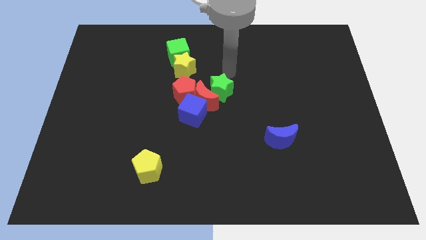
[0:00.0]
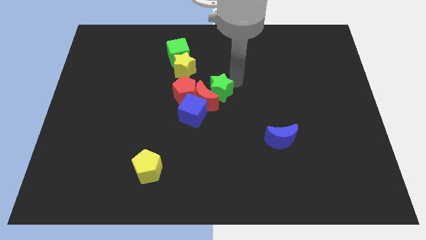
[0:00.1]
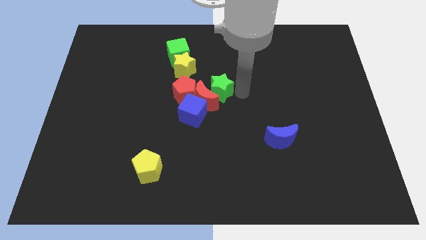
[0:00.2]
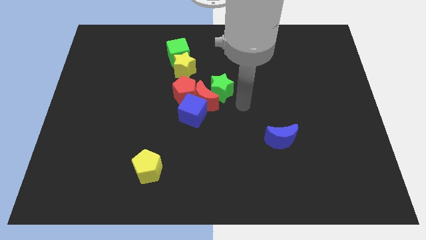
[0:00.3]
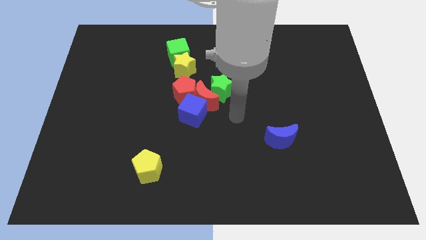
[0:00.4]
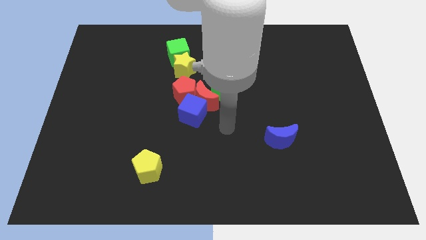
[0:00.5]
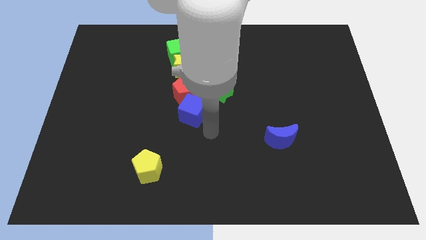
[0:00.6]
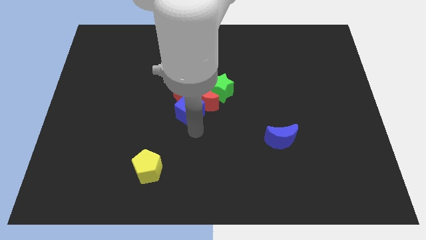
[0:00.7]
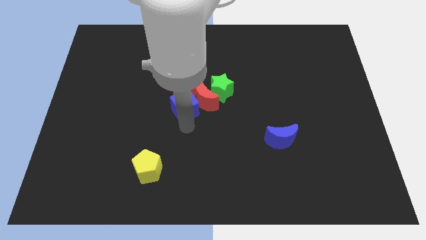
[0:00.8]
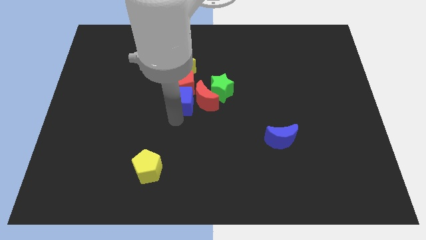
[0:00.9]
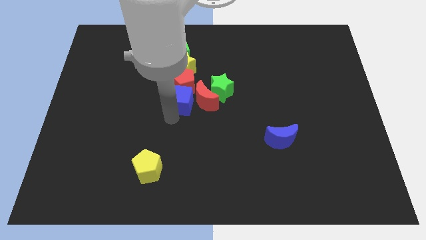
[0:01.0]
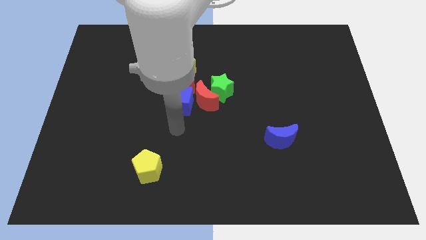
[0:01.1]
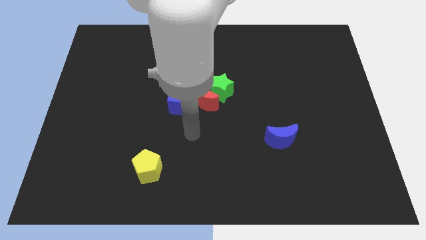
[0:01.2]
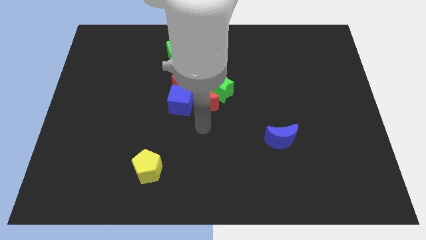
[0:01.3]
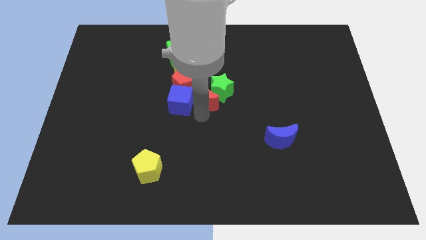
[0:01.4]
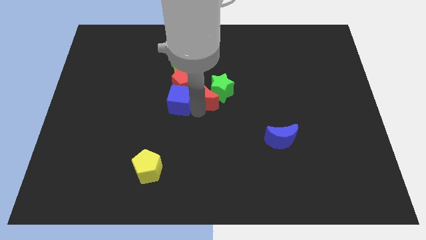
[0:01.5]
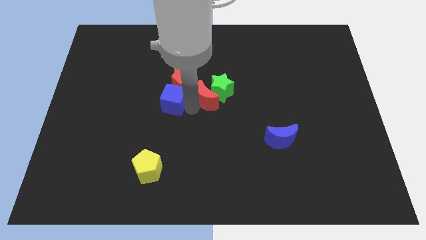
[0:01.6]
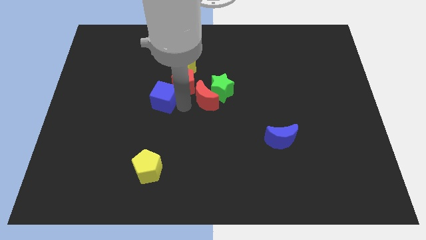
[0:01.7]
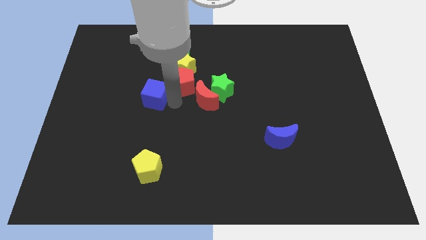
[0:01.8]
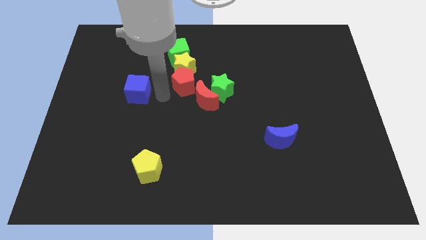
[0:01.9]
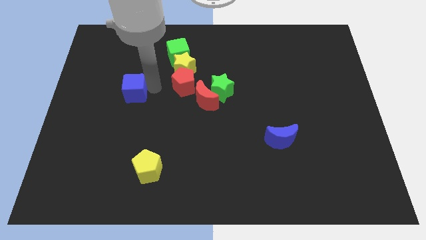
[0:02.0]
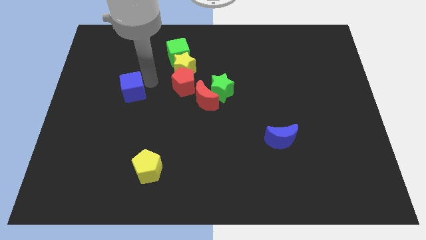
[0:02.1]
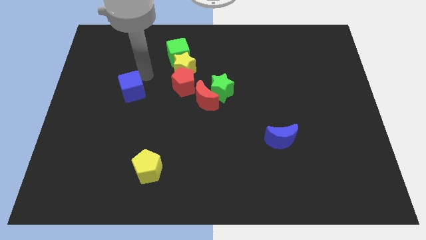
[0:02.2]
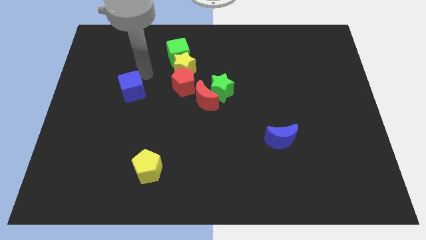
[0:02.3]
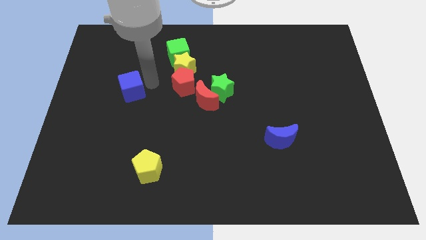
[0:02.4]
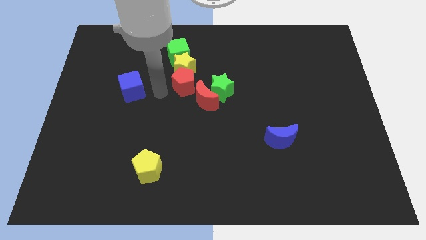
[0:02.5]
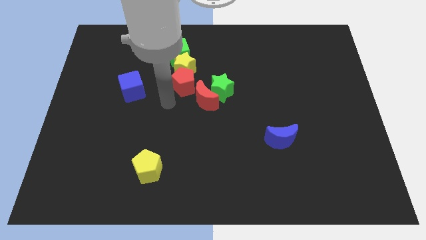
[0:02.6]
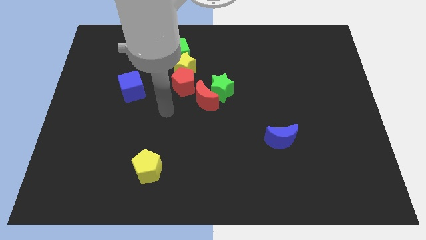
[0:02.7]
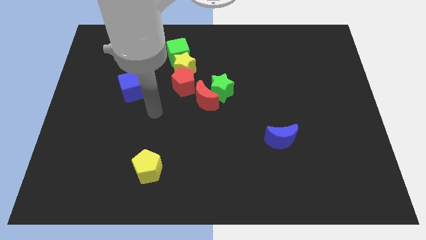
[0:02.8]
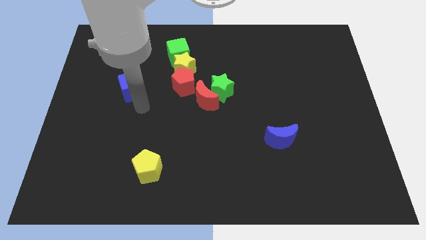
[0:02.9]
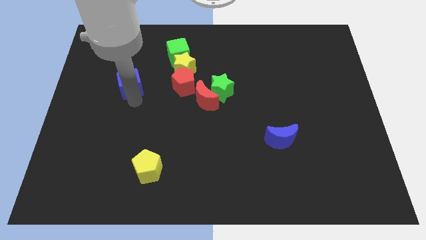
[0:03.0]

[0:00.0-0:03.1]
move the blue cube to the left of the red pentagon

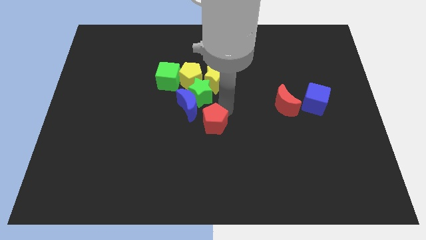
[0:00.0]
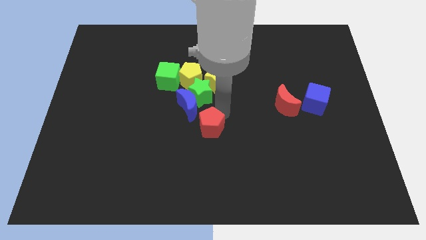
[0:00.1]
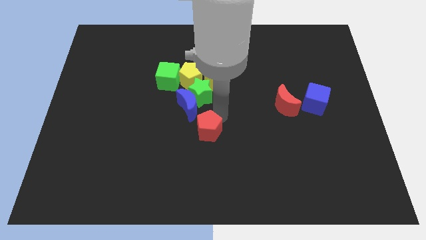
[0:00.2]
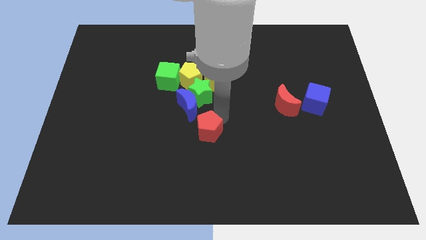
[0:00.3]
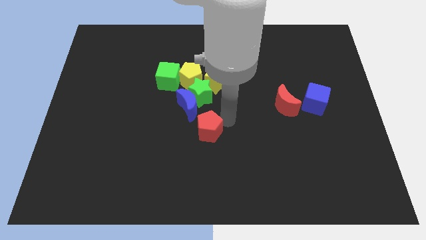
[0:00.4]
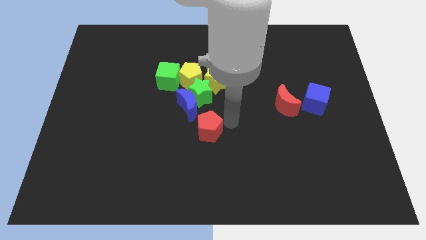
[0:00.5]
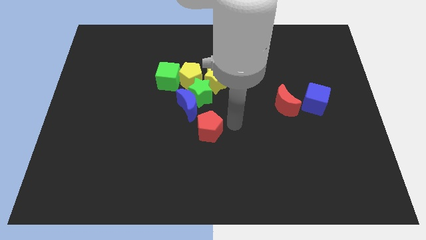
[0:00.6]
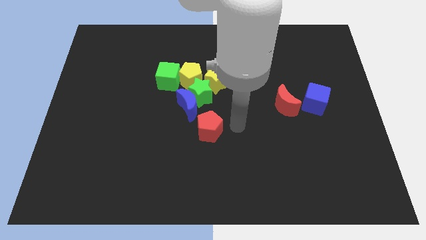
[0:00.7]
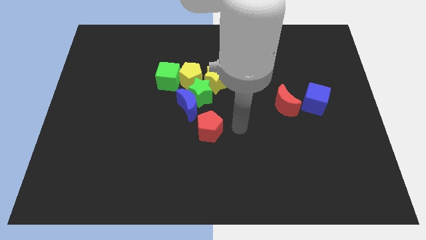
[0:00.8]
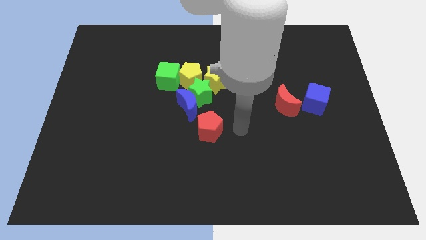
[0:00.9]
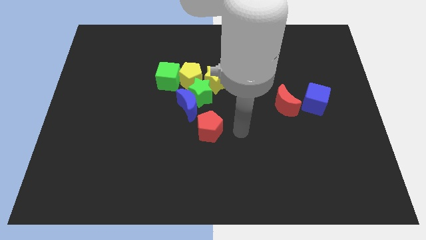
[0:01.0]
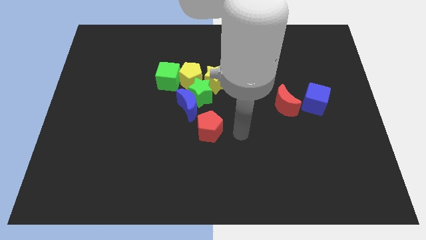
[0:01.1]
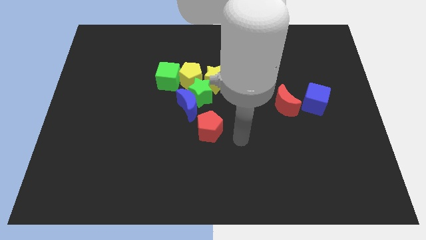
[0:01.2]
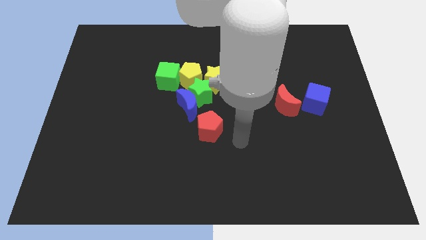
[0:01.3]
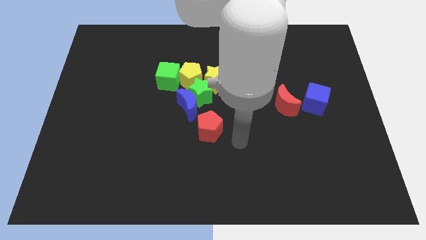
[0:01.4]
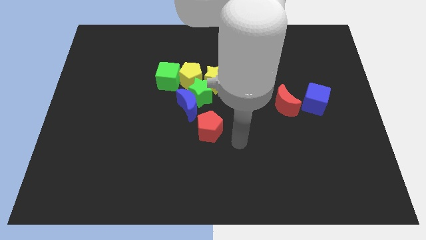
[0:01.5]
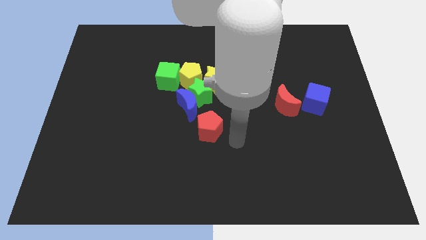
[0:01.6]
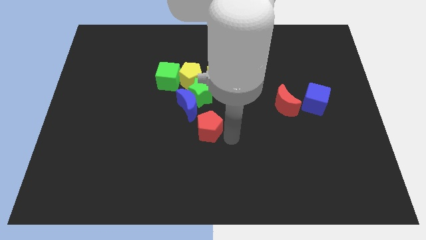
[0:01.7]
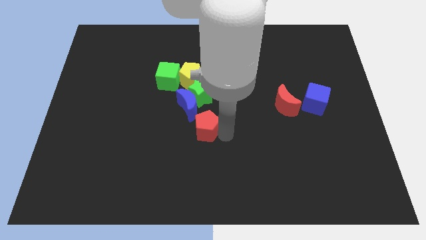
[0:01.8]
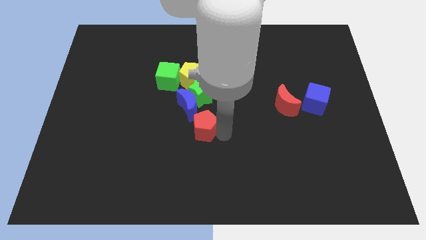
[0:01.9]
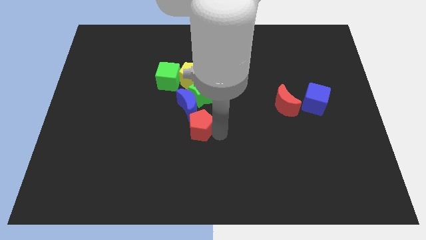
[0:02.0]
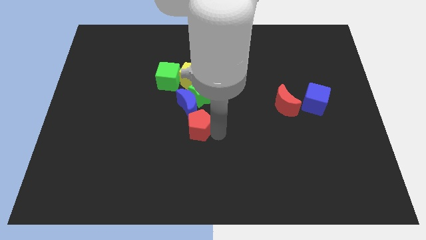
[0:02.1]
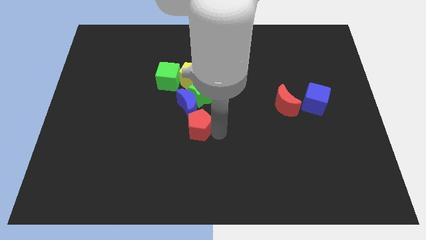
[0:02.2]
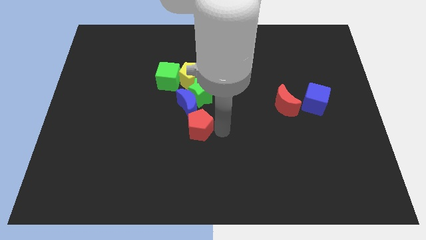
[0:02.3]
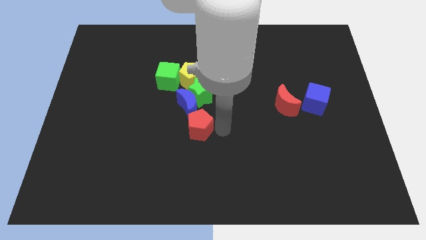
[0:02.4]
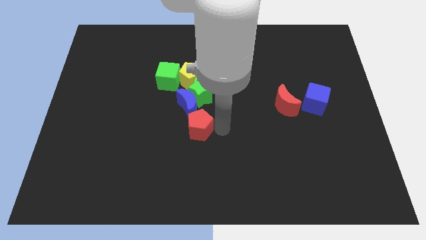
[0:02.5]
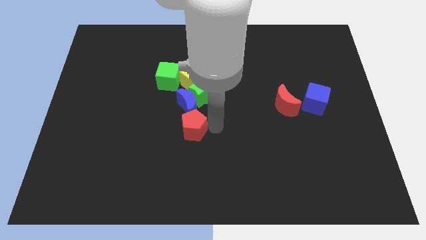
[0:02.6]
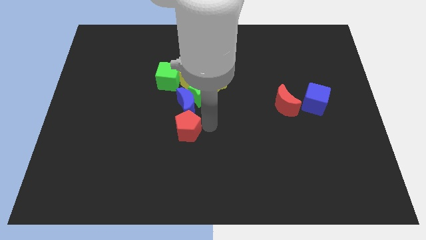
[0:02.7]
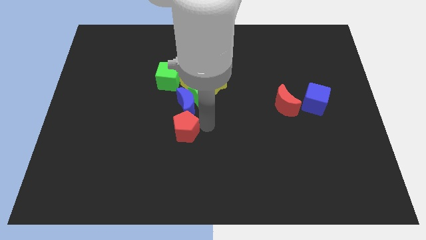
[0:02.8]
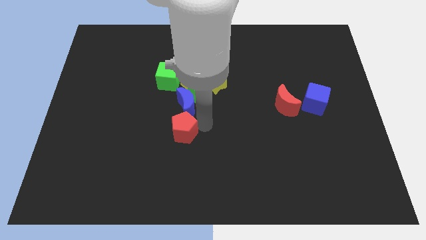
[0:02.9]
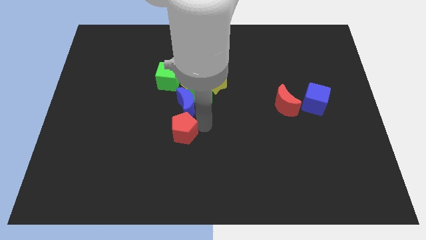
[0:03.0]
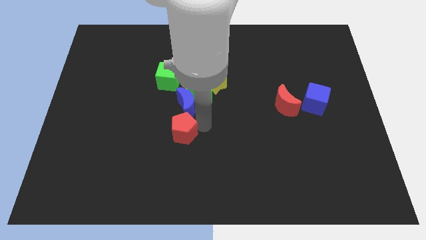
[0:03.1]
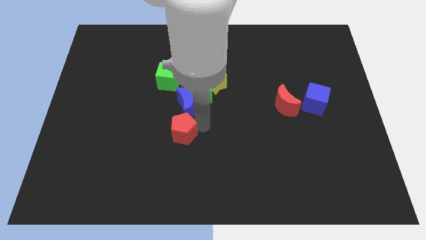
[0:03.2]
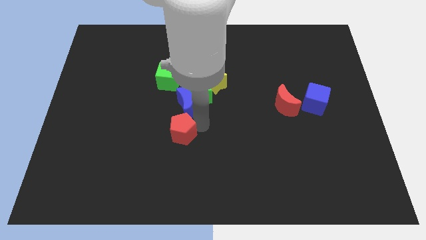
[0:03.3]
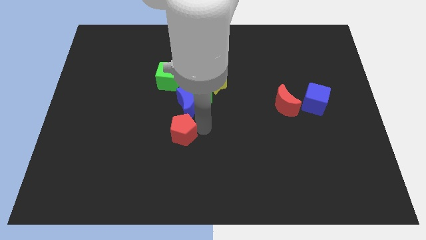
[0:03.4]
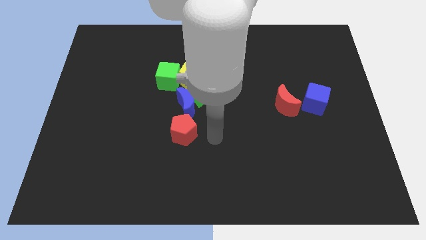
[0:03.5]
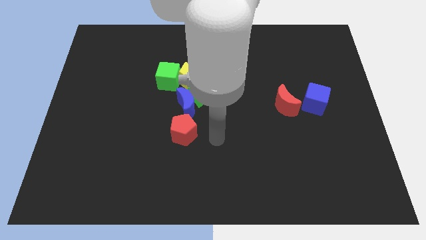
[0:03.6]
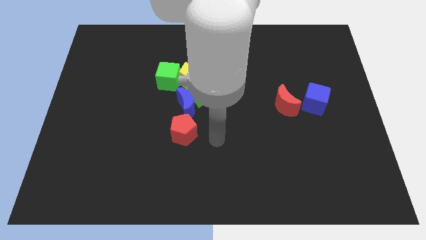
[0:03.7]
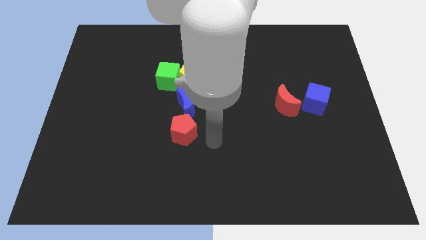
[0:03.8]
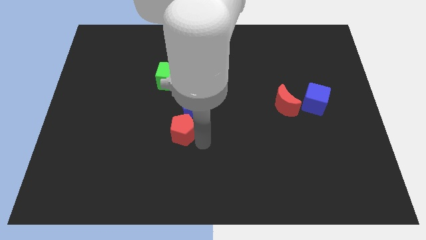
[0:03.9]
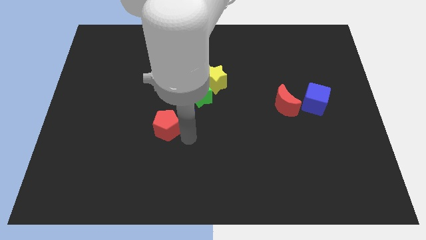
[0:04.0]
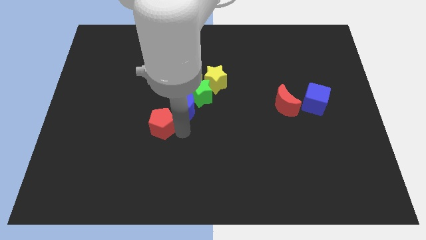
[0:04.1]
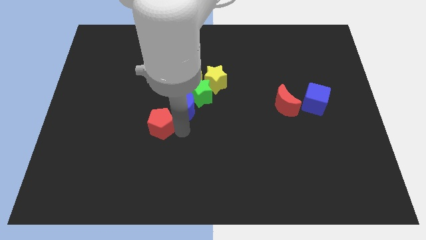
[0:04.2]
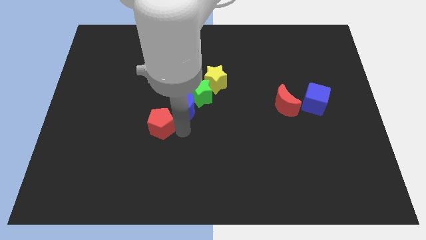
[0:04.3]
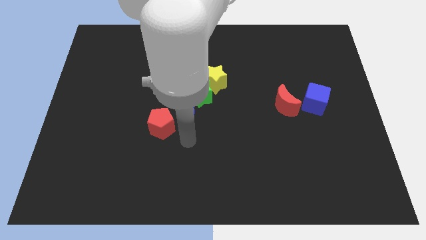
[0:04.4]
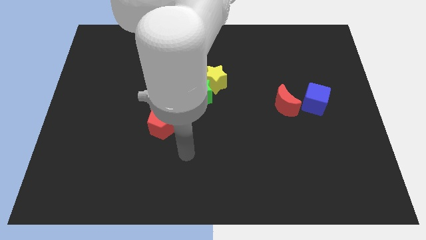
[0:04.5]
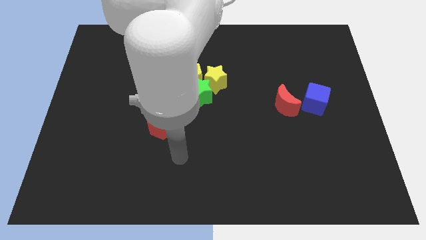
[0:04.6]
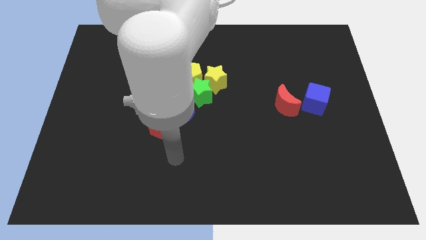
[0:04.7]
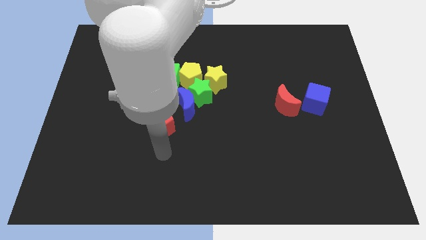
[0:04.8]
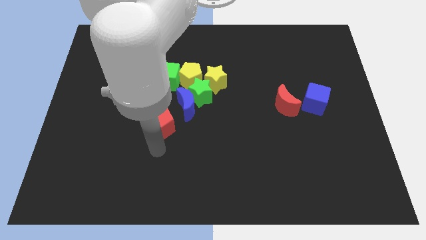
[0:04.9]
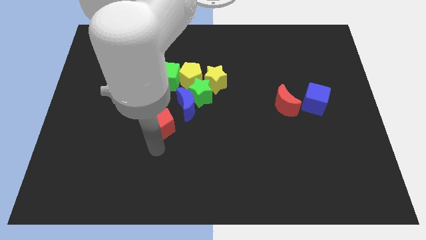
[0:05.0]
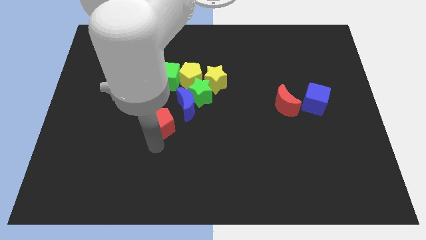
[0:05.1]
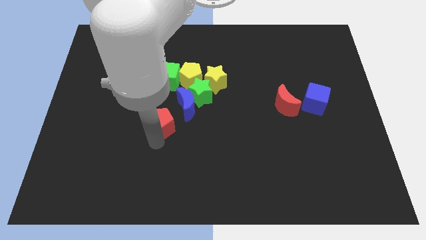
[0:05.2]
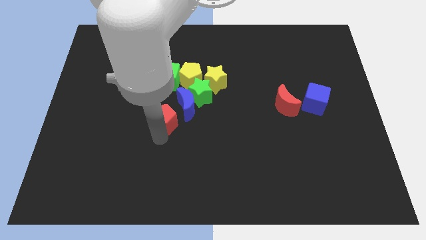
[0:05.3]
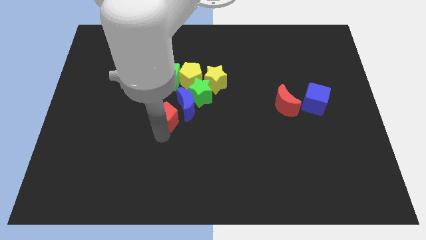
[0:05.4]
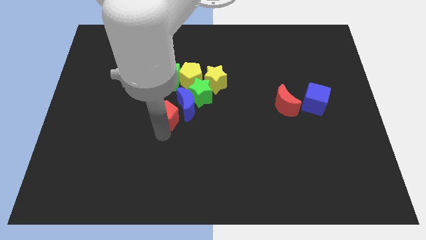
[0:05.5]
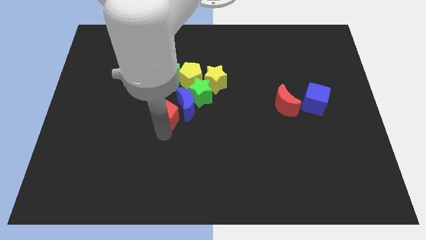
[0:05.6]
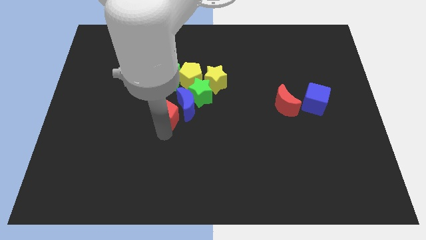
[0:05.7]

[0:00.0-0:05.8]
put the red pentagon on the left side of the blue crescent
